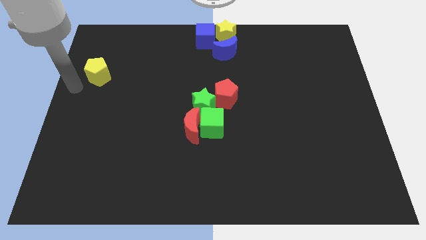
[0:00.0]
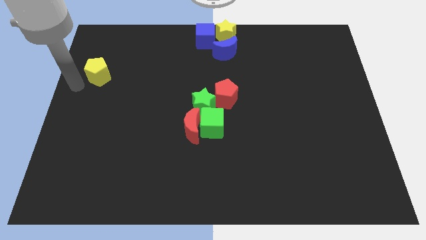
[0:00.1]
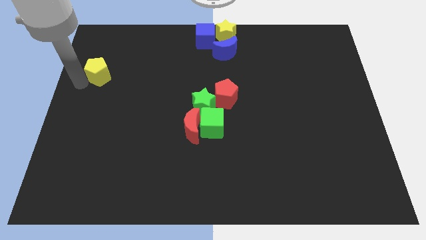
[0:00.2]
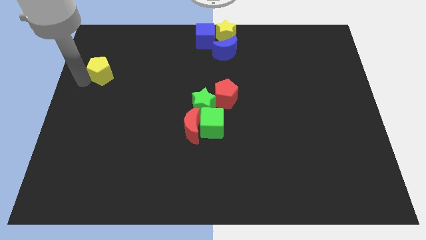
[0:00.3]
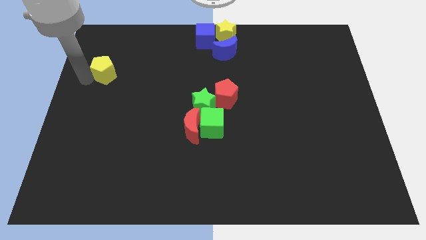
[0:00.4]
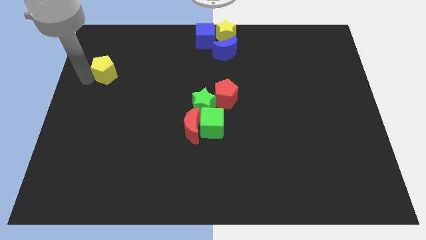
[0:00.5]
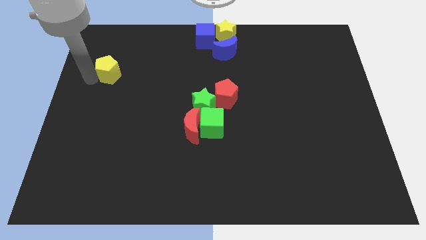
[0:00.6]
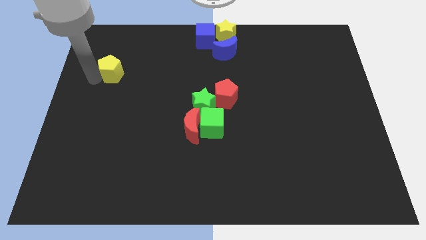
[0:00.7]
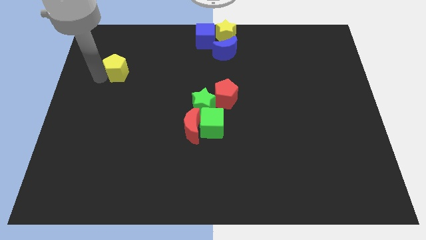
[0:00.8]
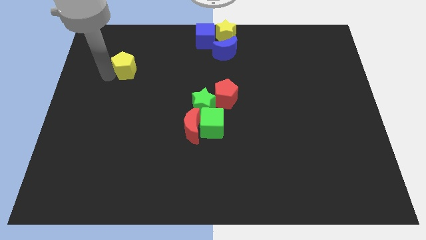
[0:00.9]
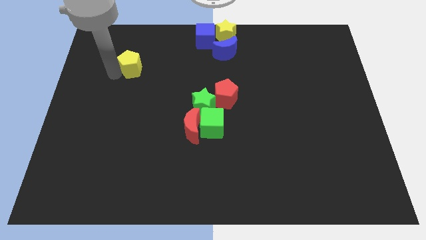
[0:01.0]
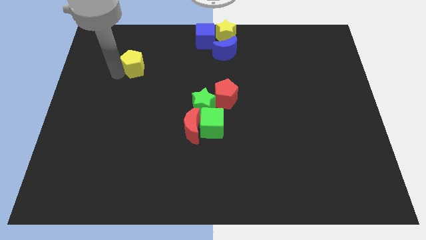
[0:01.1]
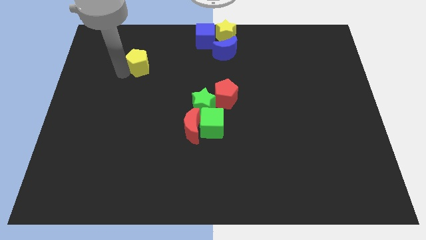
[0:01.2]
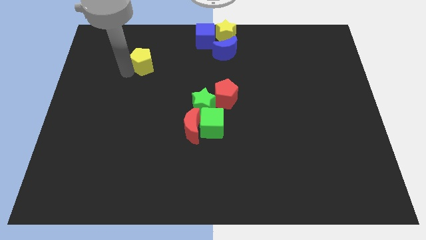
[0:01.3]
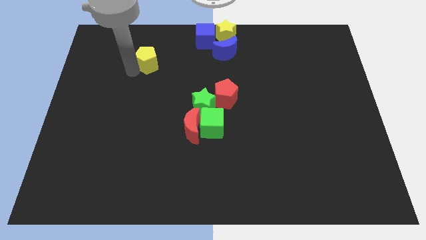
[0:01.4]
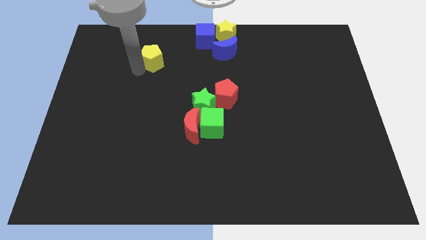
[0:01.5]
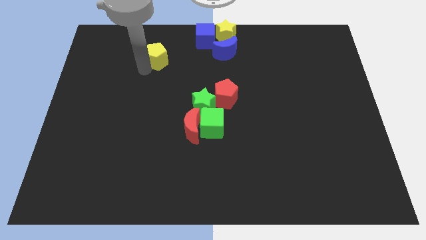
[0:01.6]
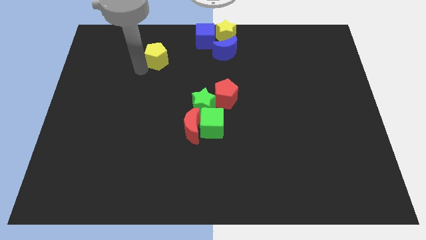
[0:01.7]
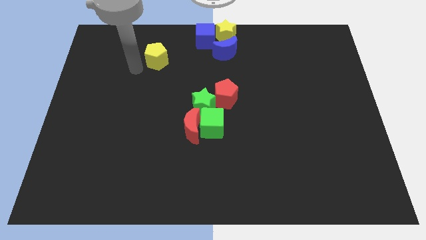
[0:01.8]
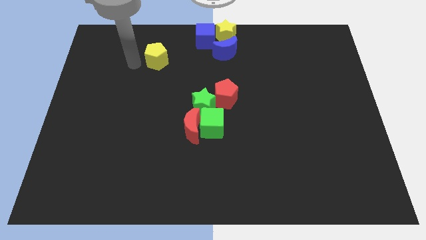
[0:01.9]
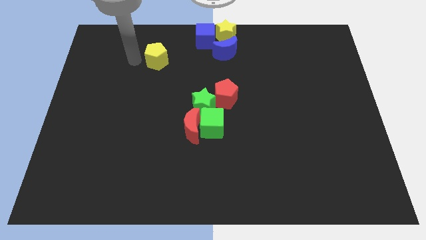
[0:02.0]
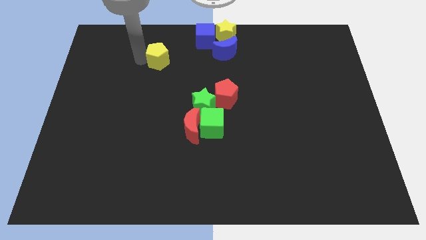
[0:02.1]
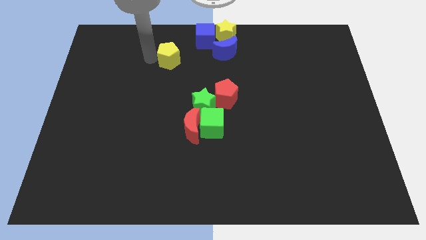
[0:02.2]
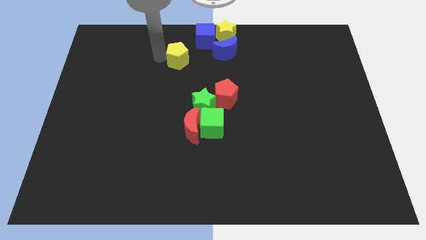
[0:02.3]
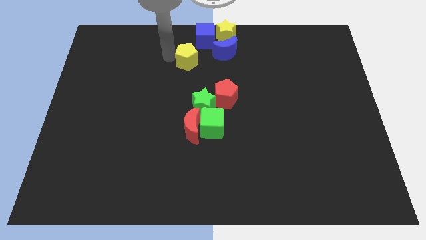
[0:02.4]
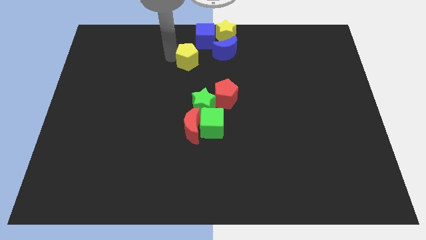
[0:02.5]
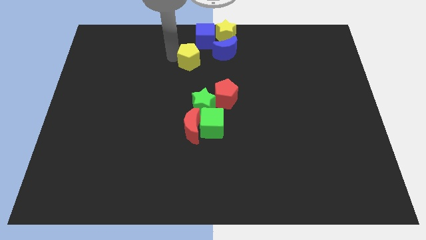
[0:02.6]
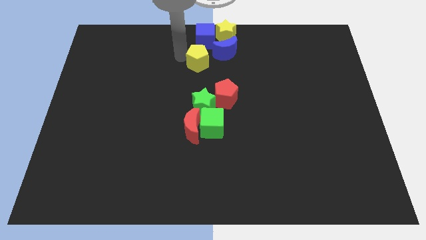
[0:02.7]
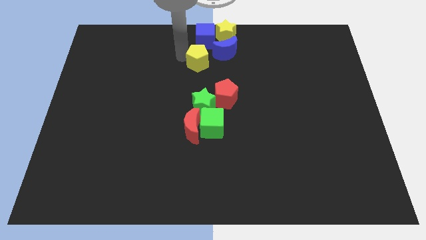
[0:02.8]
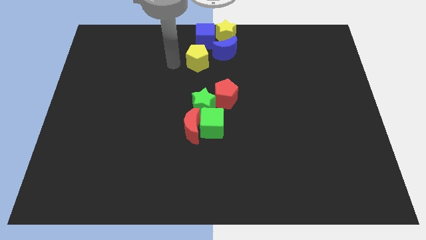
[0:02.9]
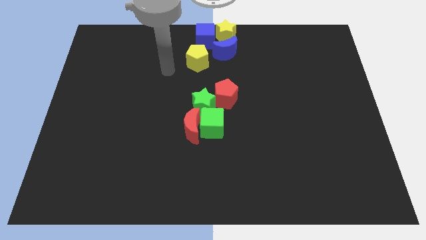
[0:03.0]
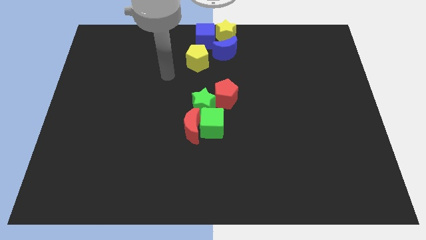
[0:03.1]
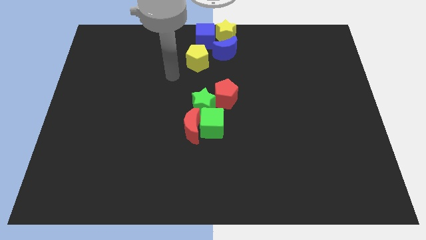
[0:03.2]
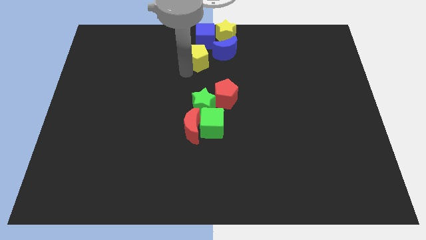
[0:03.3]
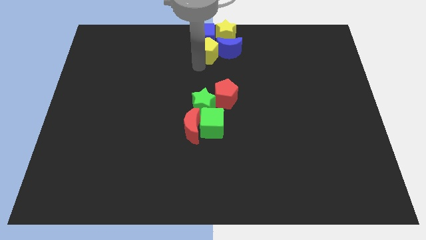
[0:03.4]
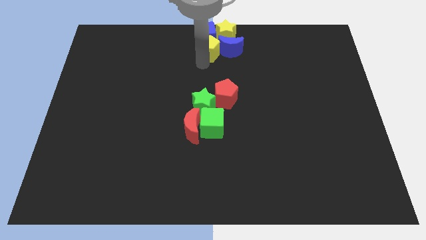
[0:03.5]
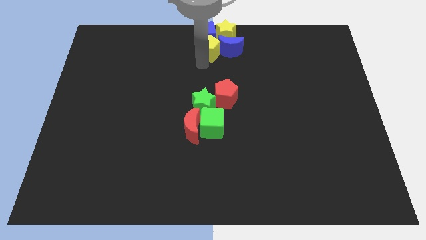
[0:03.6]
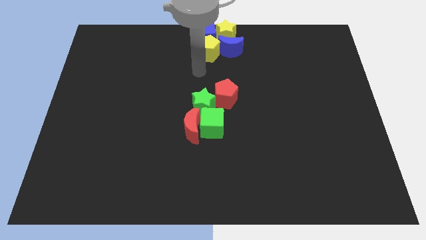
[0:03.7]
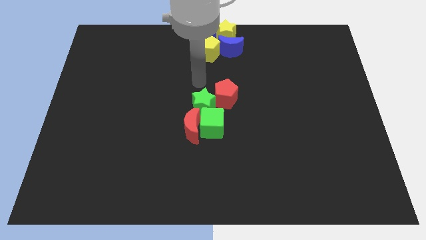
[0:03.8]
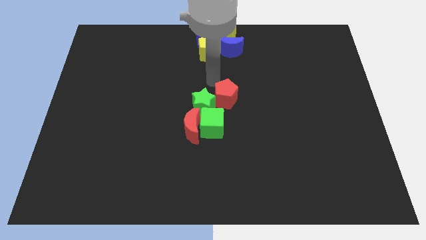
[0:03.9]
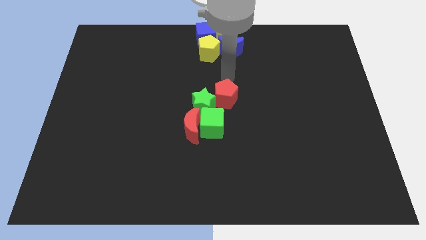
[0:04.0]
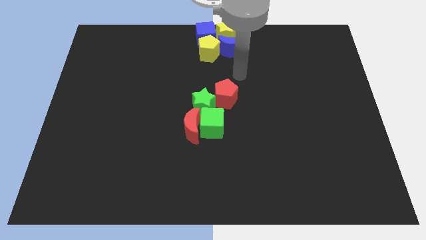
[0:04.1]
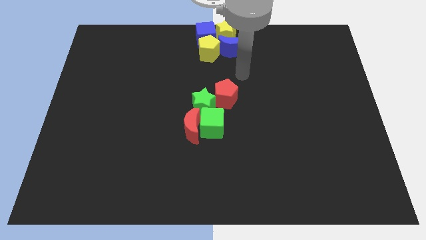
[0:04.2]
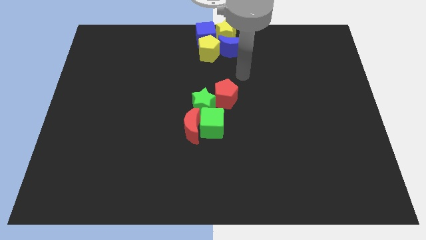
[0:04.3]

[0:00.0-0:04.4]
push the yellow pentagon towards the top center of the board

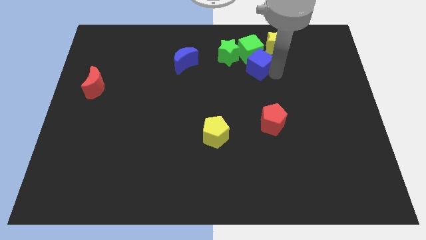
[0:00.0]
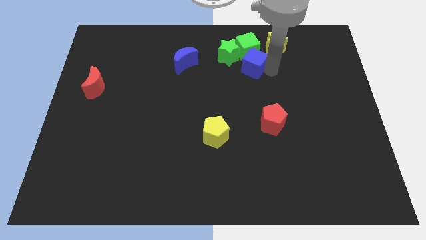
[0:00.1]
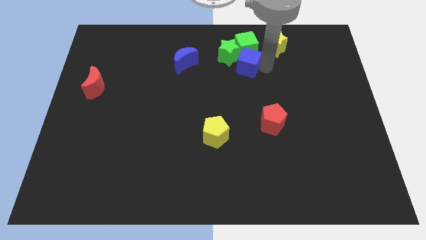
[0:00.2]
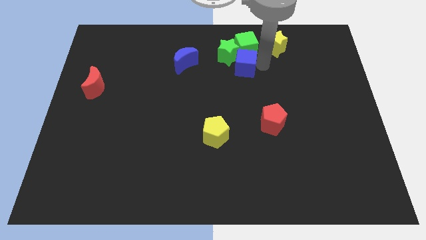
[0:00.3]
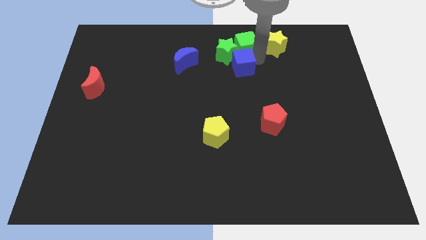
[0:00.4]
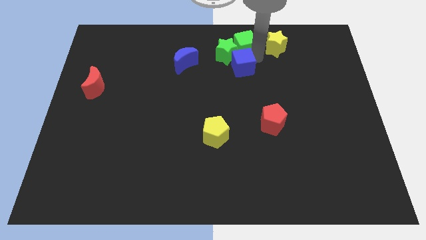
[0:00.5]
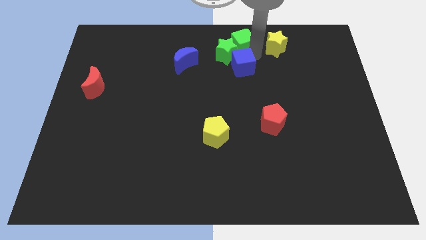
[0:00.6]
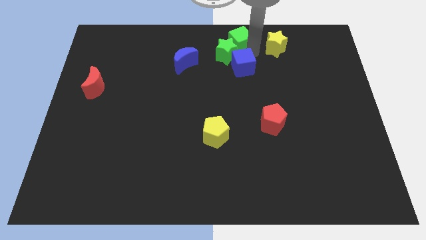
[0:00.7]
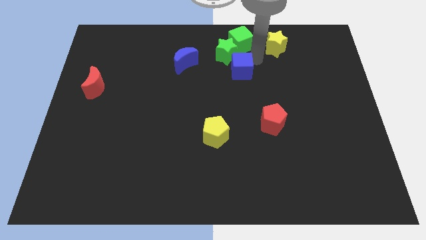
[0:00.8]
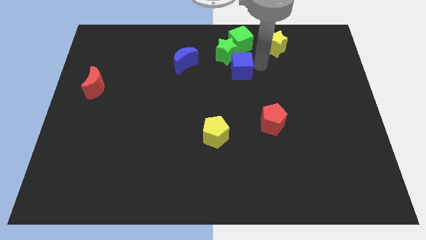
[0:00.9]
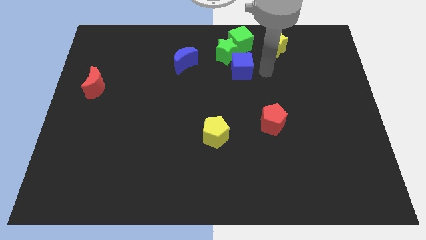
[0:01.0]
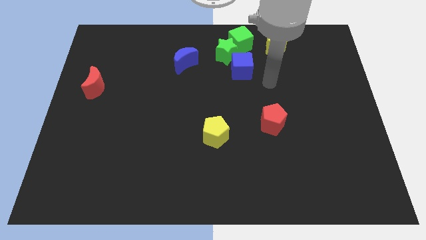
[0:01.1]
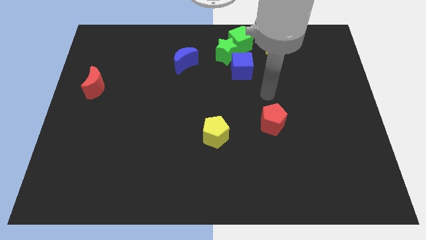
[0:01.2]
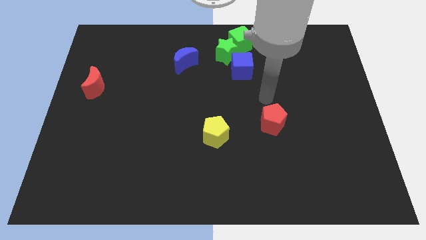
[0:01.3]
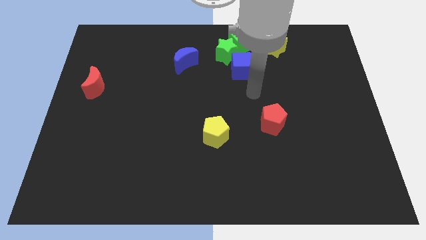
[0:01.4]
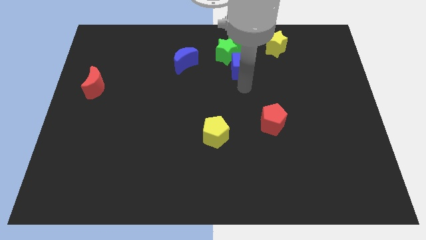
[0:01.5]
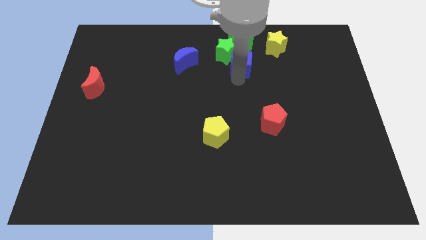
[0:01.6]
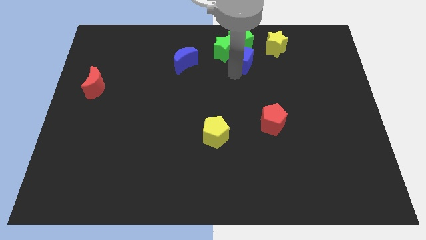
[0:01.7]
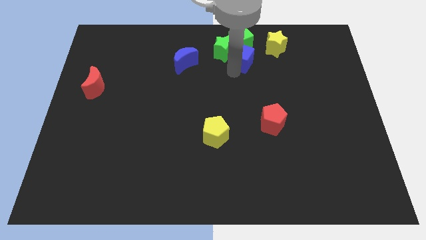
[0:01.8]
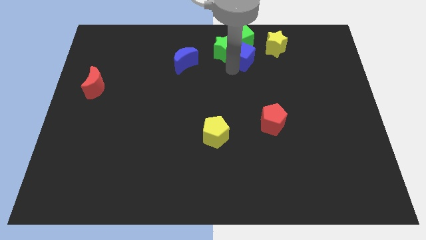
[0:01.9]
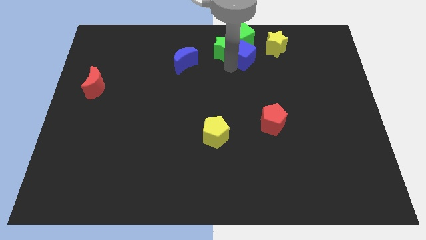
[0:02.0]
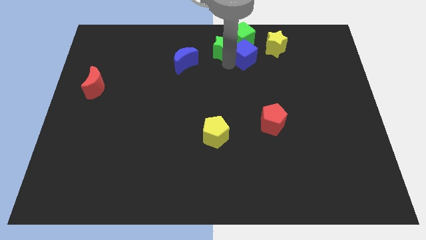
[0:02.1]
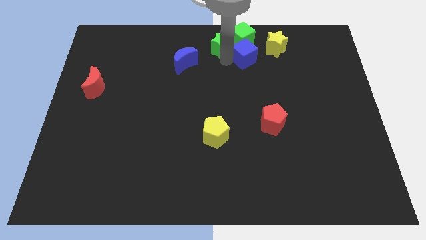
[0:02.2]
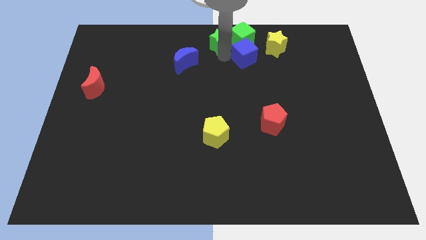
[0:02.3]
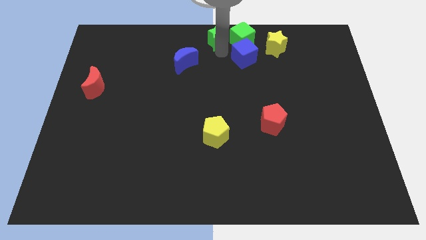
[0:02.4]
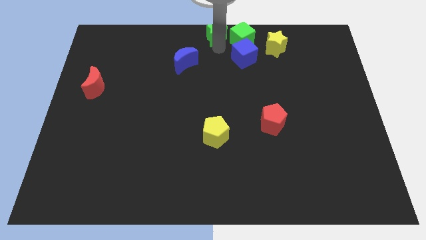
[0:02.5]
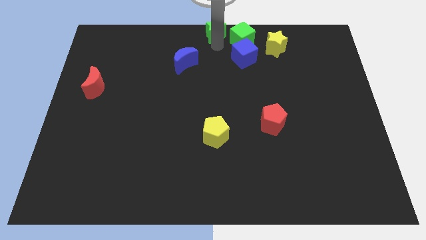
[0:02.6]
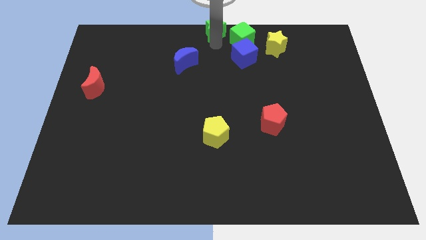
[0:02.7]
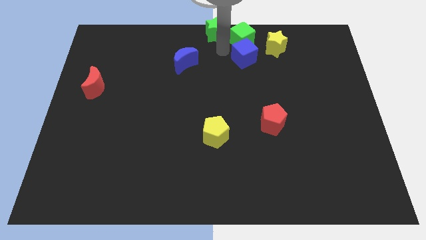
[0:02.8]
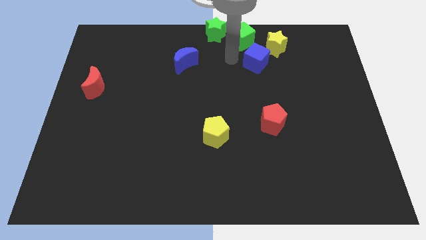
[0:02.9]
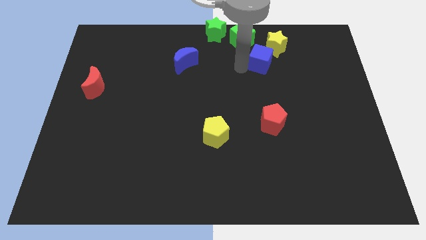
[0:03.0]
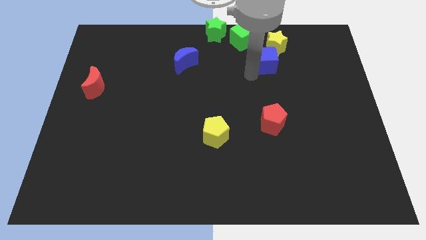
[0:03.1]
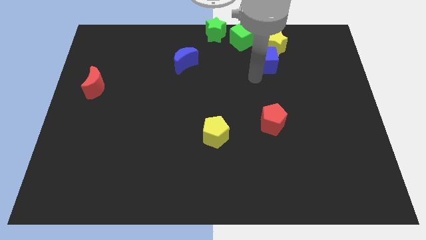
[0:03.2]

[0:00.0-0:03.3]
move the green star and the blue cube away from the green cube

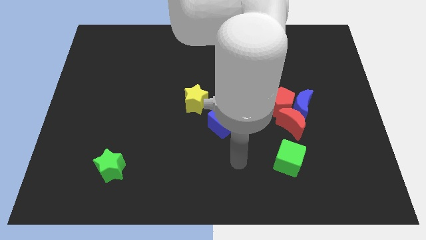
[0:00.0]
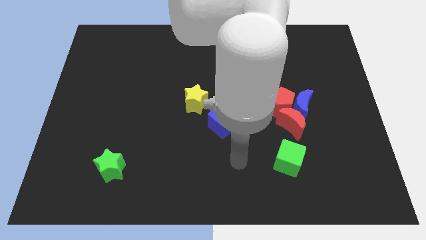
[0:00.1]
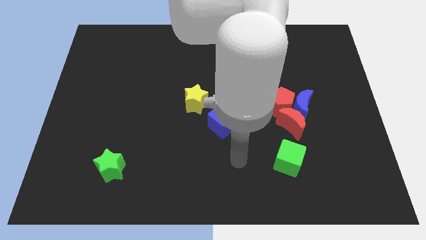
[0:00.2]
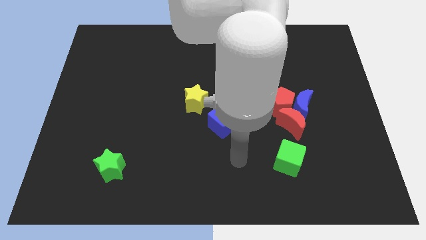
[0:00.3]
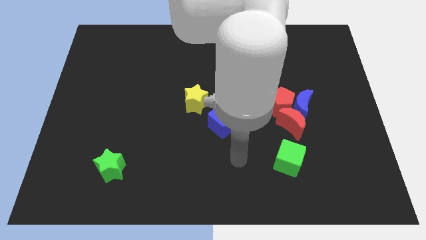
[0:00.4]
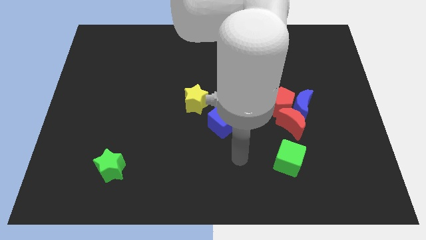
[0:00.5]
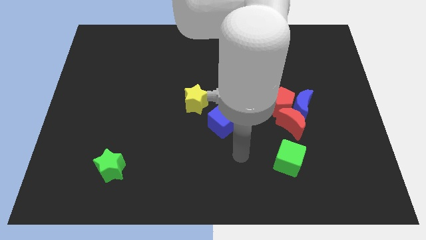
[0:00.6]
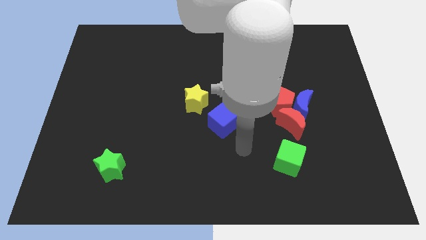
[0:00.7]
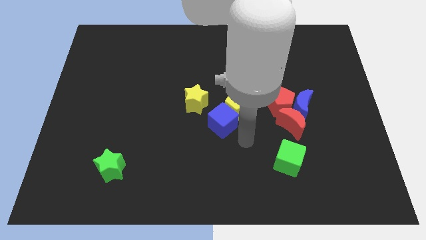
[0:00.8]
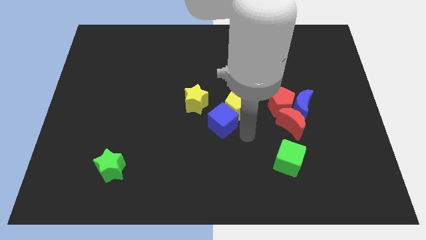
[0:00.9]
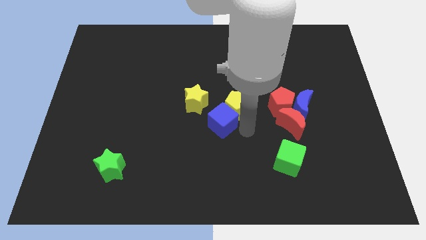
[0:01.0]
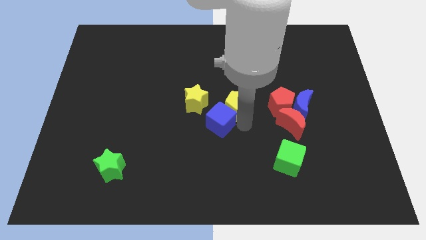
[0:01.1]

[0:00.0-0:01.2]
place your arm to the right side of blue cube

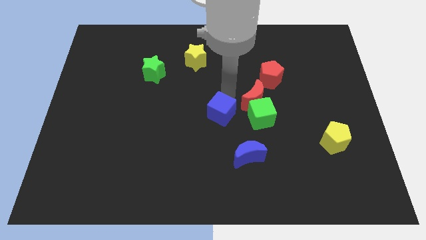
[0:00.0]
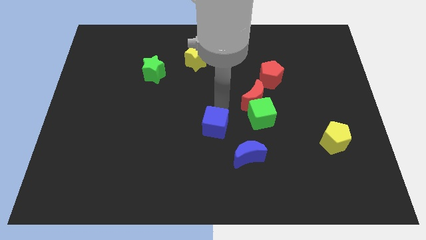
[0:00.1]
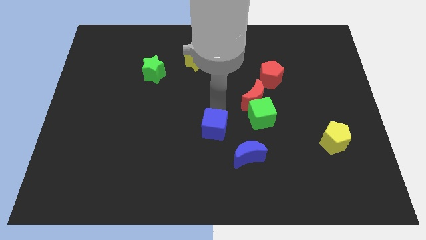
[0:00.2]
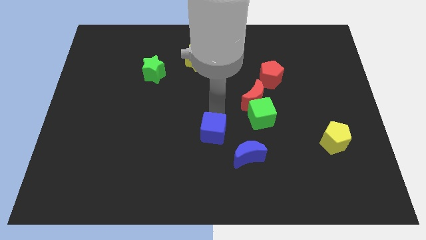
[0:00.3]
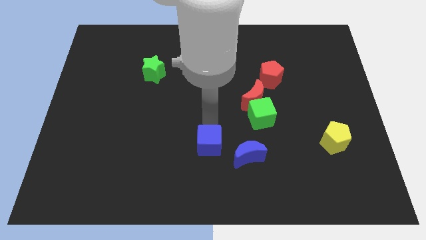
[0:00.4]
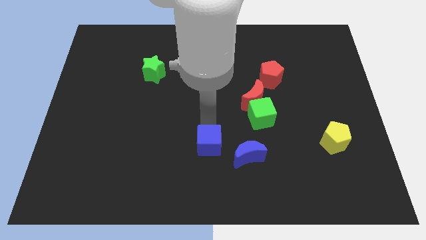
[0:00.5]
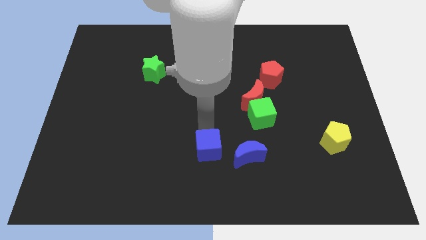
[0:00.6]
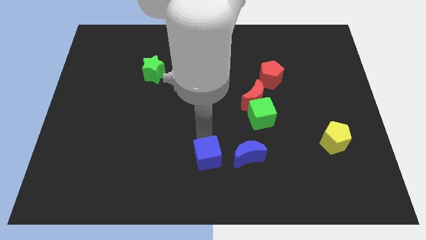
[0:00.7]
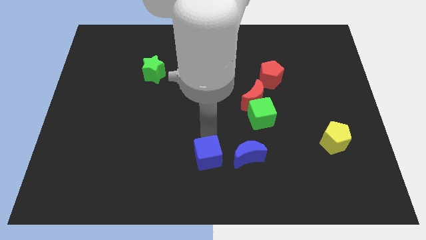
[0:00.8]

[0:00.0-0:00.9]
place the blue cube to the left of the blue crescent
